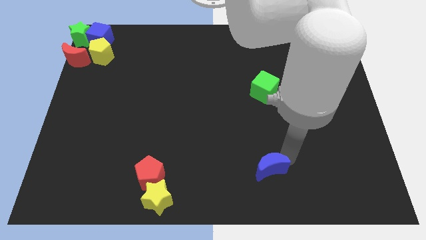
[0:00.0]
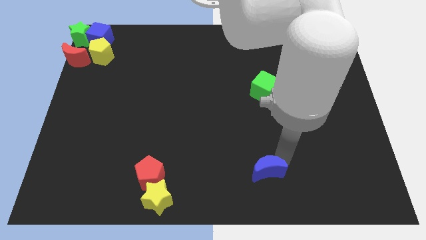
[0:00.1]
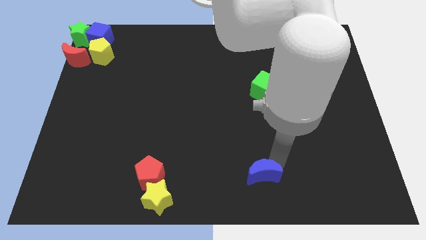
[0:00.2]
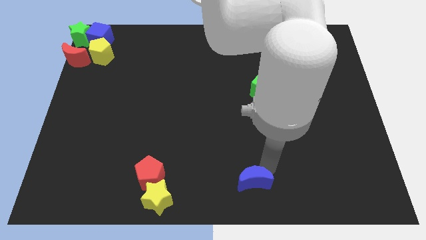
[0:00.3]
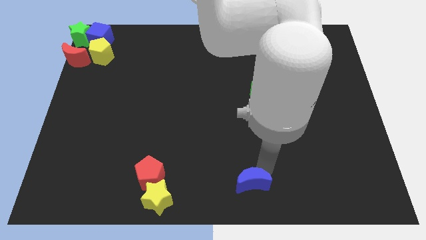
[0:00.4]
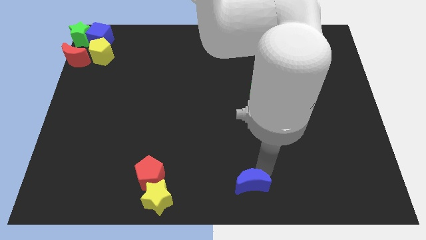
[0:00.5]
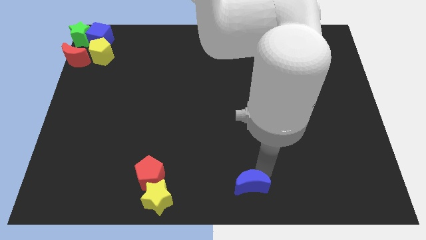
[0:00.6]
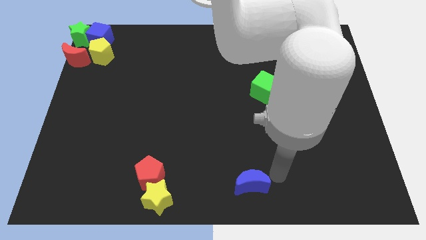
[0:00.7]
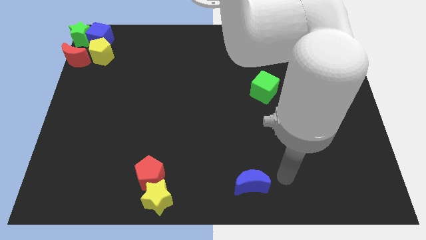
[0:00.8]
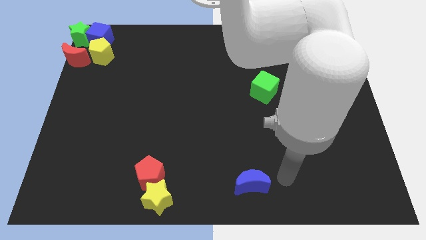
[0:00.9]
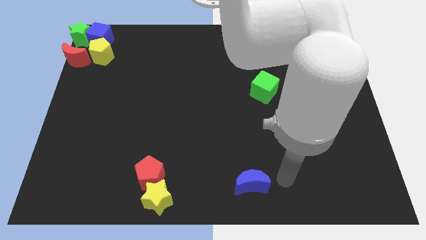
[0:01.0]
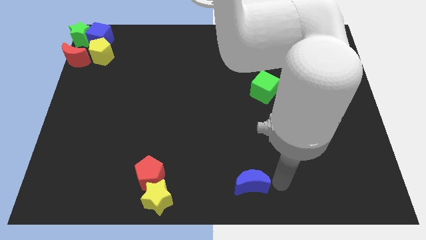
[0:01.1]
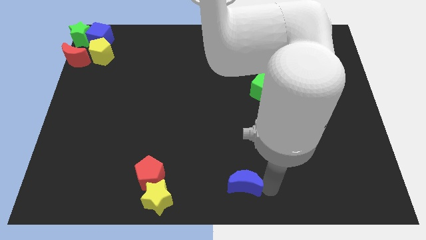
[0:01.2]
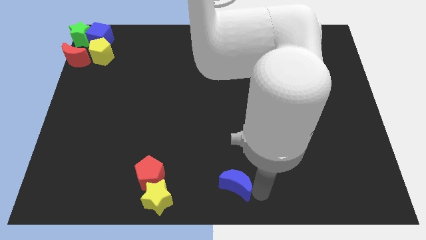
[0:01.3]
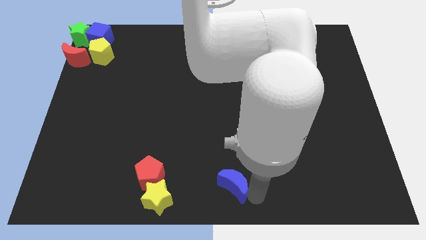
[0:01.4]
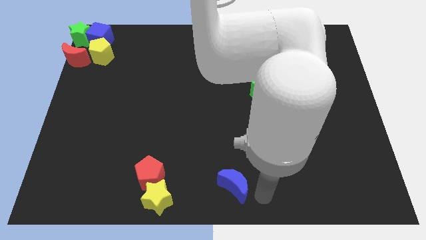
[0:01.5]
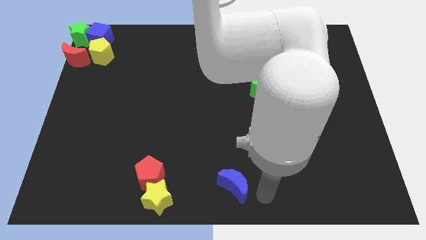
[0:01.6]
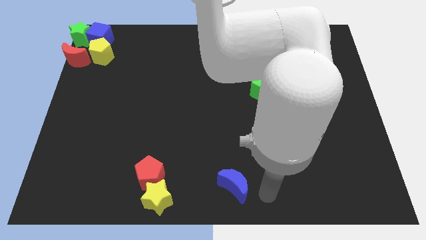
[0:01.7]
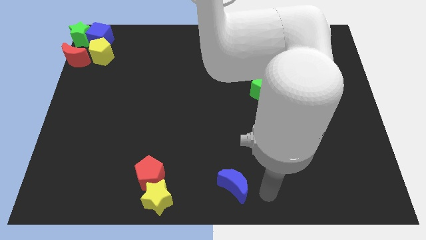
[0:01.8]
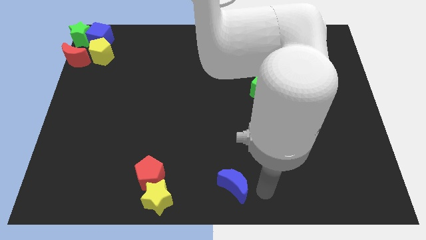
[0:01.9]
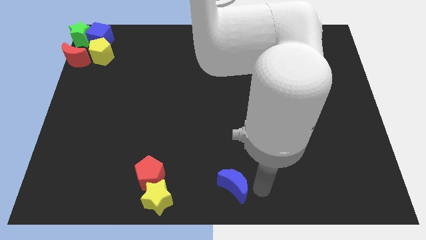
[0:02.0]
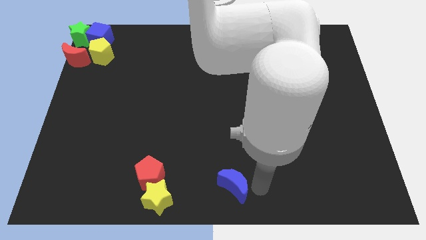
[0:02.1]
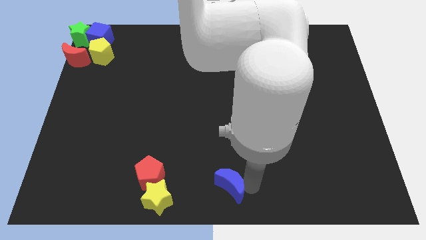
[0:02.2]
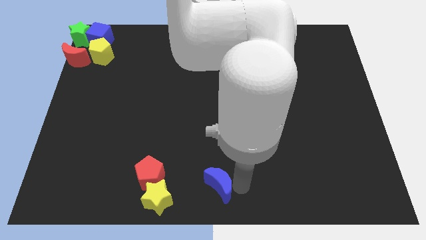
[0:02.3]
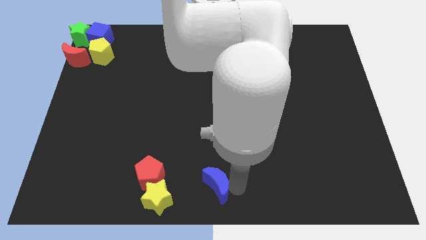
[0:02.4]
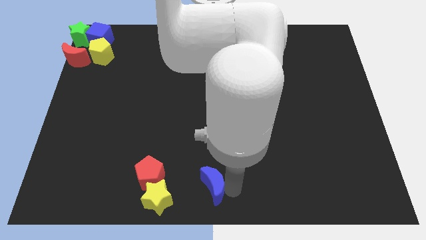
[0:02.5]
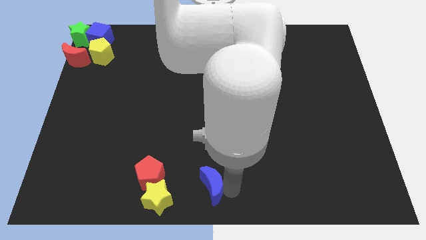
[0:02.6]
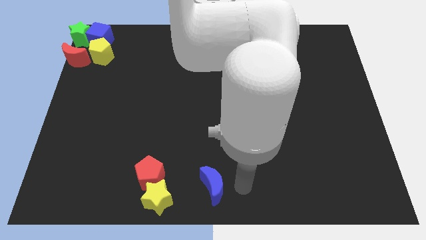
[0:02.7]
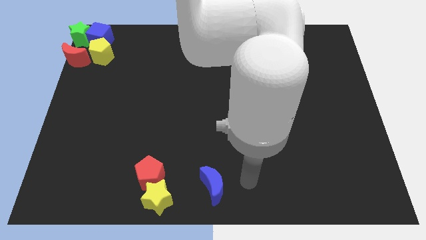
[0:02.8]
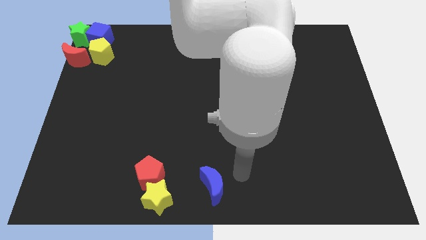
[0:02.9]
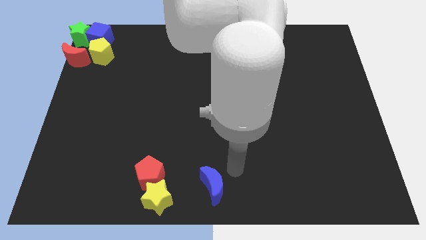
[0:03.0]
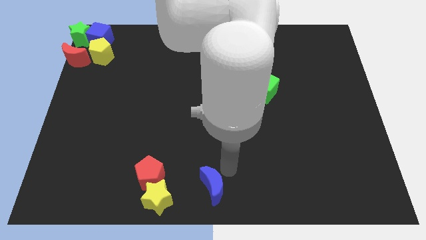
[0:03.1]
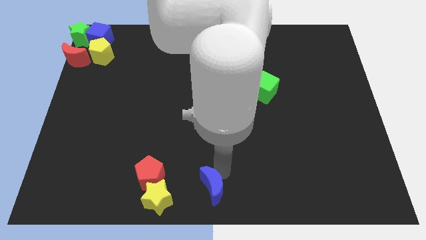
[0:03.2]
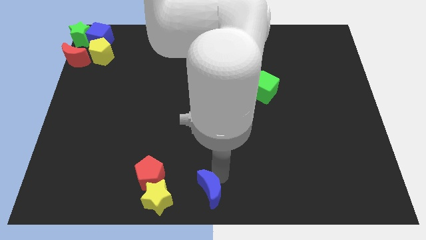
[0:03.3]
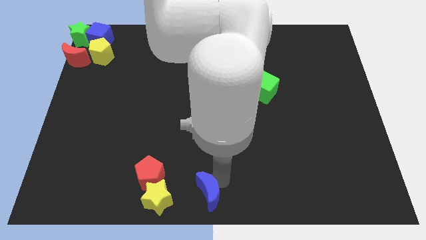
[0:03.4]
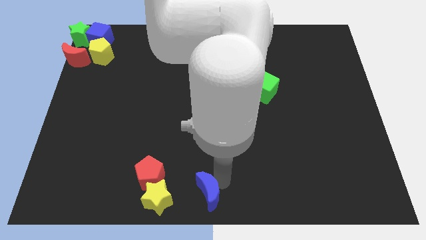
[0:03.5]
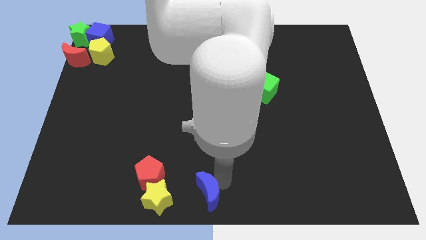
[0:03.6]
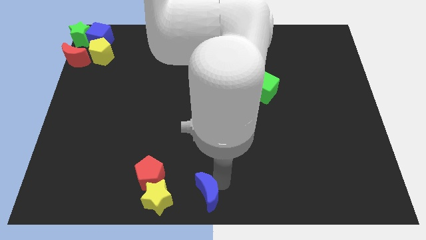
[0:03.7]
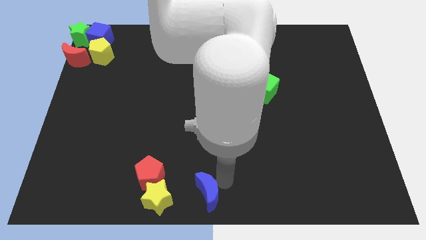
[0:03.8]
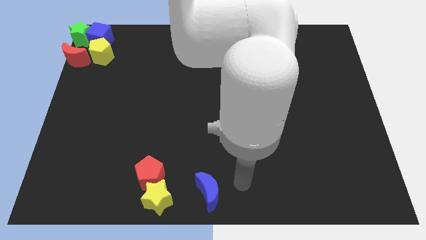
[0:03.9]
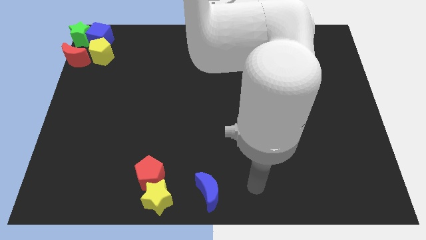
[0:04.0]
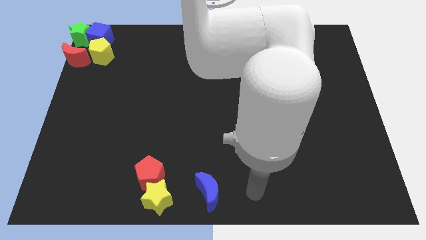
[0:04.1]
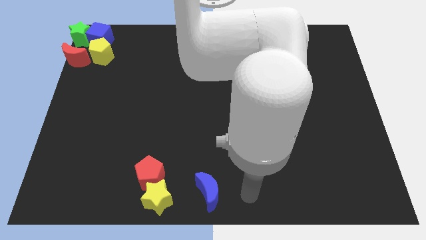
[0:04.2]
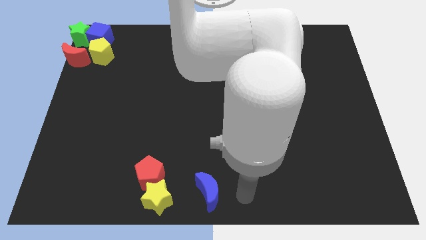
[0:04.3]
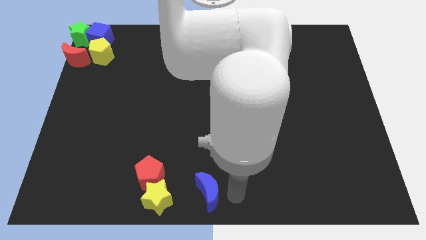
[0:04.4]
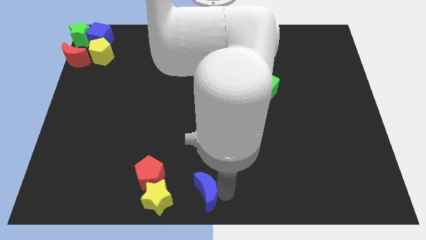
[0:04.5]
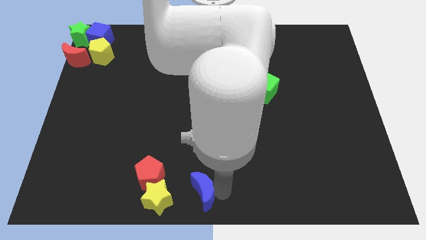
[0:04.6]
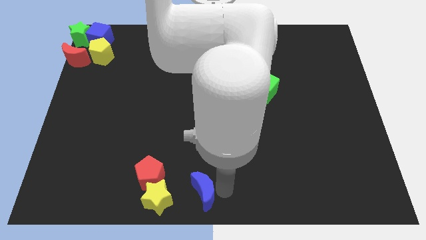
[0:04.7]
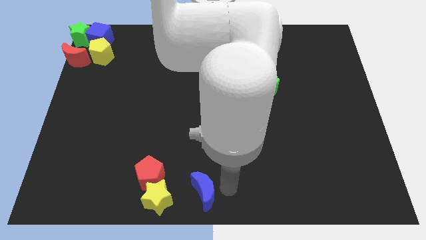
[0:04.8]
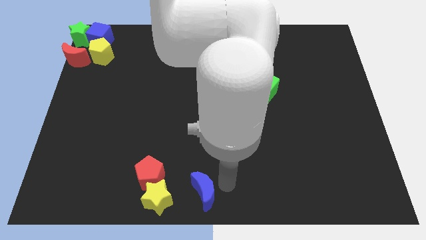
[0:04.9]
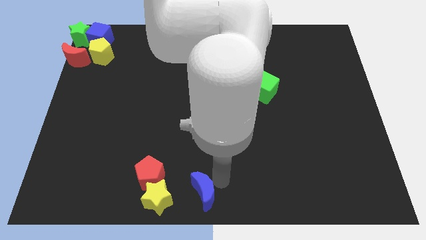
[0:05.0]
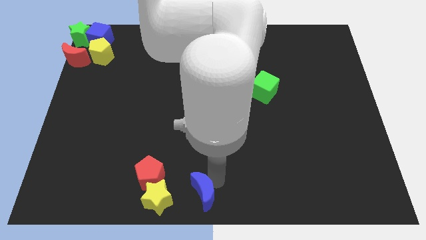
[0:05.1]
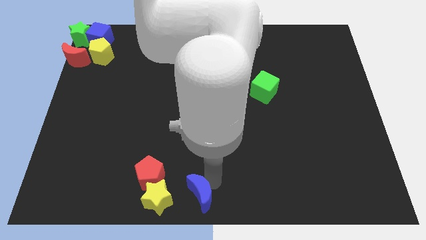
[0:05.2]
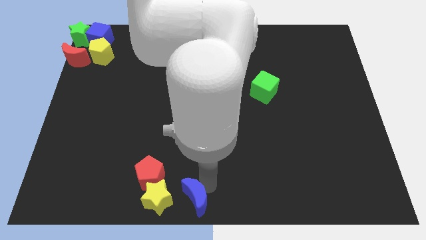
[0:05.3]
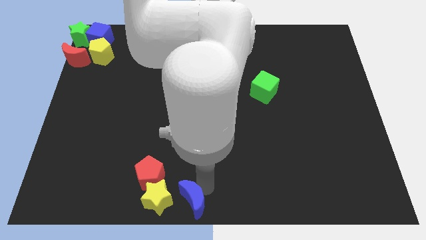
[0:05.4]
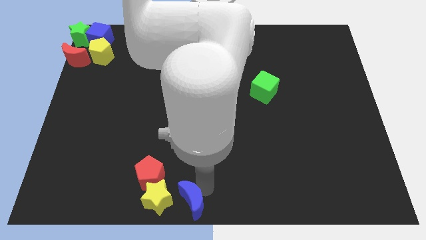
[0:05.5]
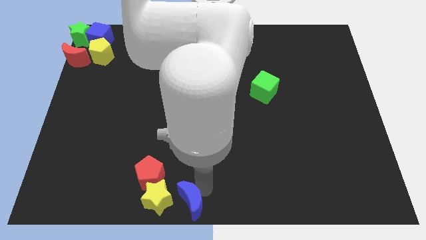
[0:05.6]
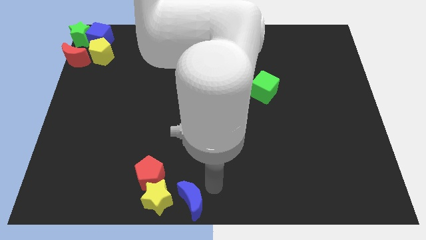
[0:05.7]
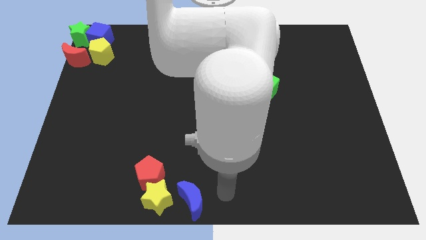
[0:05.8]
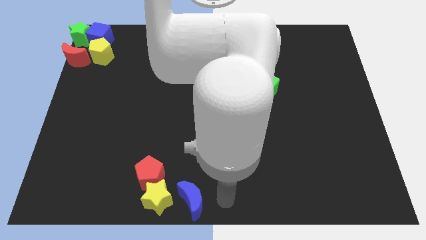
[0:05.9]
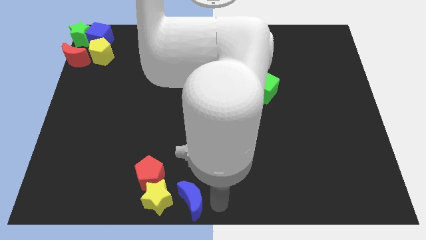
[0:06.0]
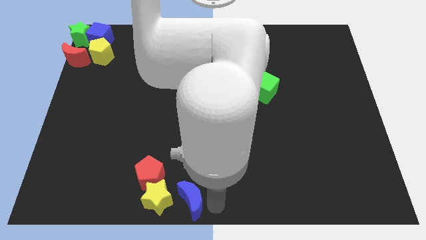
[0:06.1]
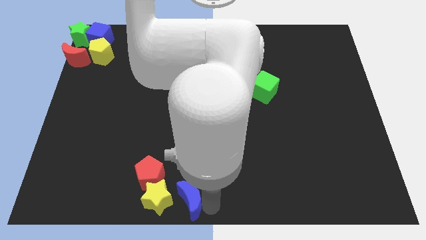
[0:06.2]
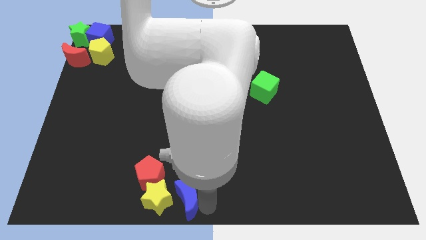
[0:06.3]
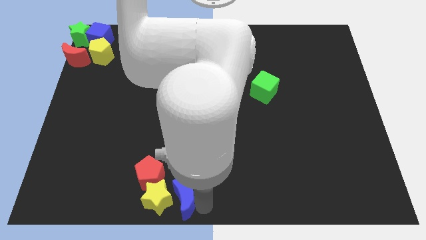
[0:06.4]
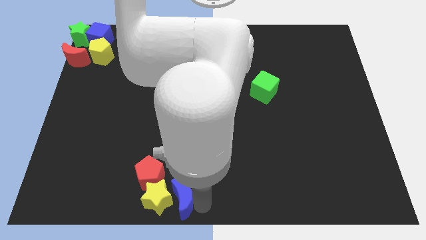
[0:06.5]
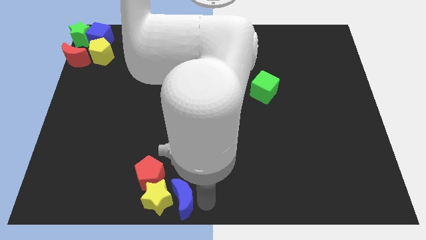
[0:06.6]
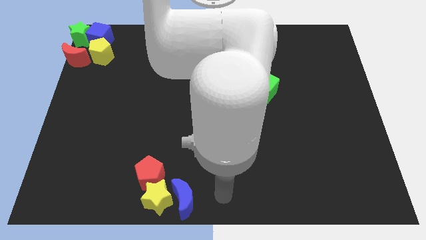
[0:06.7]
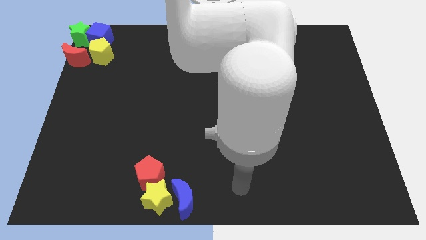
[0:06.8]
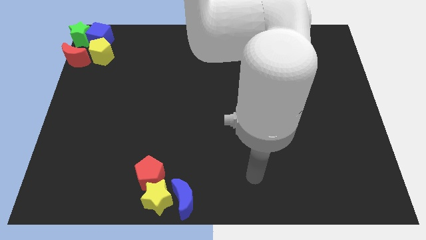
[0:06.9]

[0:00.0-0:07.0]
place the blue crescent to the right of the yellow star

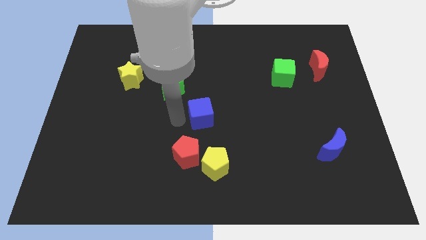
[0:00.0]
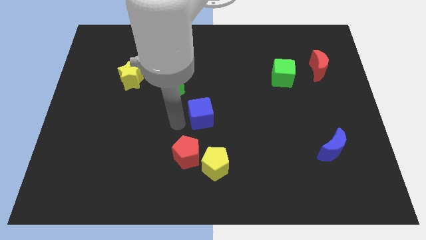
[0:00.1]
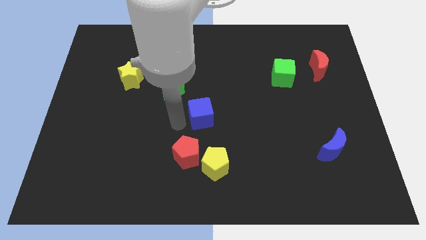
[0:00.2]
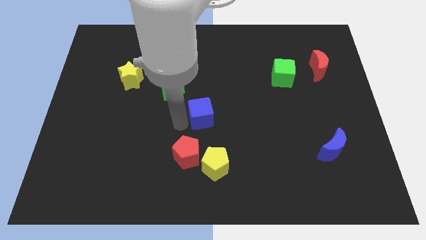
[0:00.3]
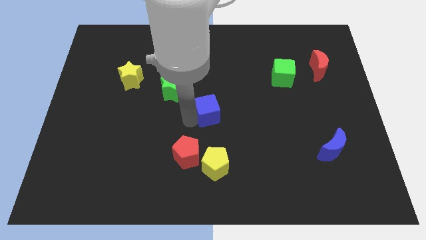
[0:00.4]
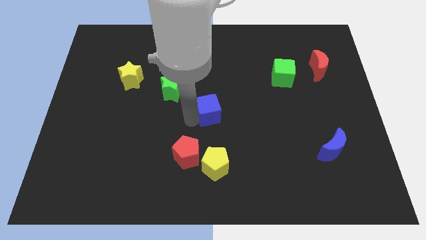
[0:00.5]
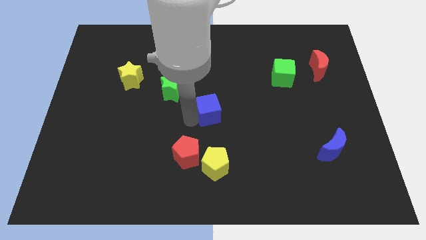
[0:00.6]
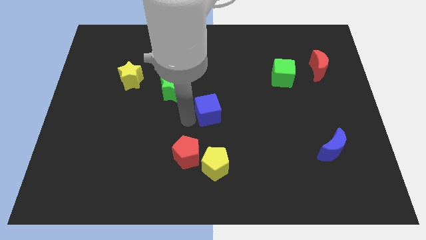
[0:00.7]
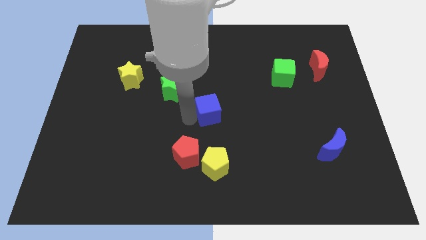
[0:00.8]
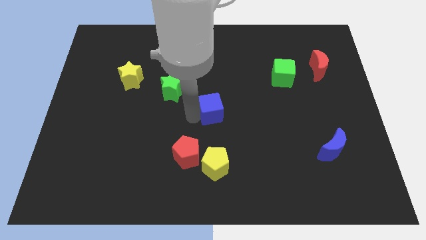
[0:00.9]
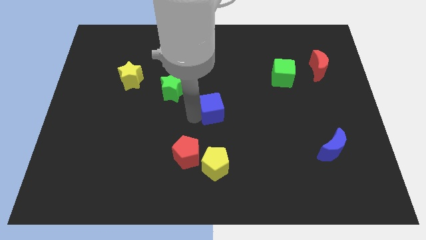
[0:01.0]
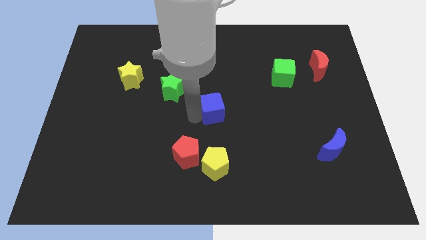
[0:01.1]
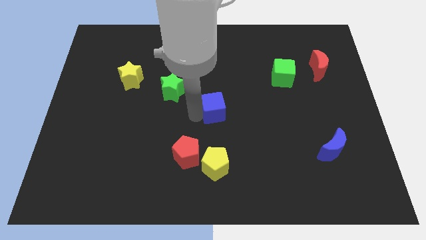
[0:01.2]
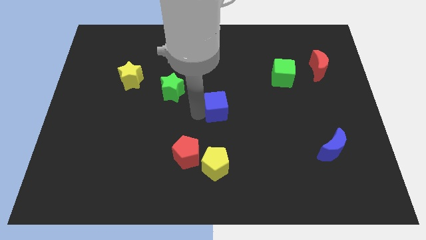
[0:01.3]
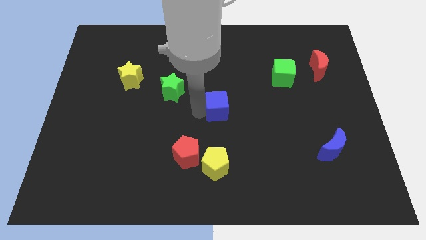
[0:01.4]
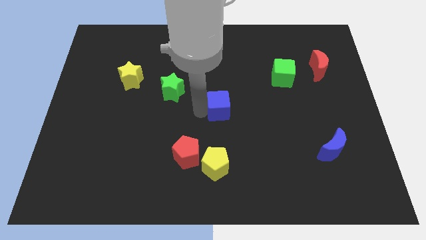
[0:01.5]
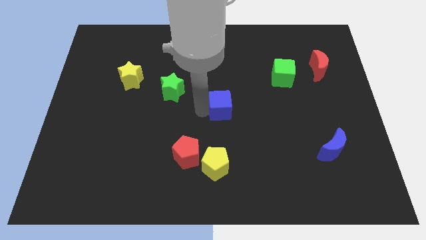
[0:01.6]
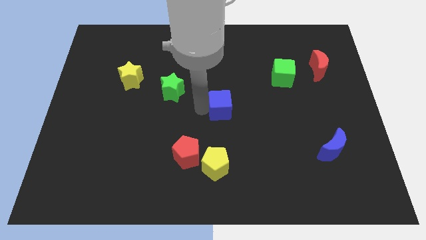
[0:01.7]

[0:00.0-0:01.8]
push the blue cube towards the center side

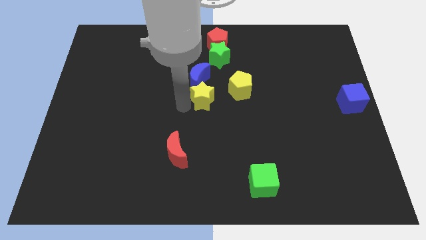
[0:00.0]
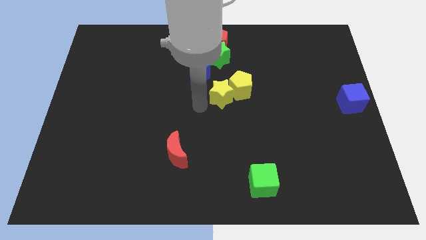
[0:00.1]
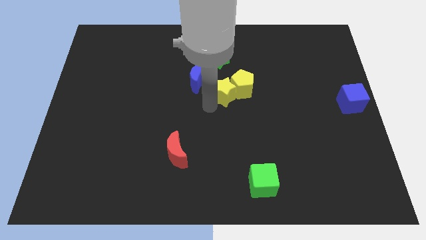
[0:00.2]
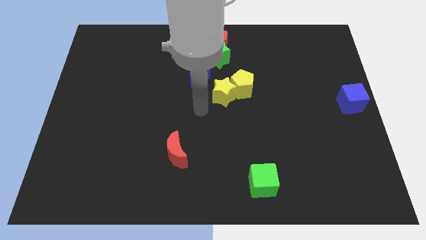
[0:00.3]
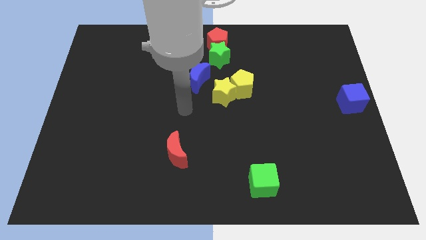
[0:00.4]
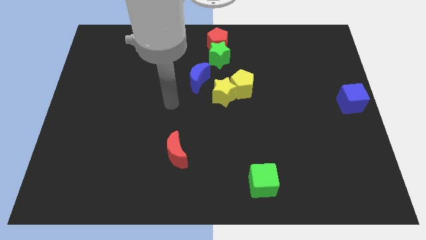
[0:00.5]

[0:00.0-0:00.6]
push yellow star into the yellow pentagon
